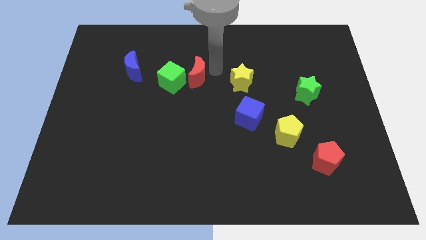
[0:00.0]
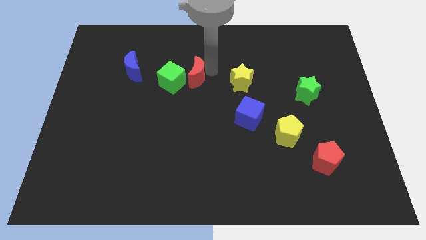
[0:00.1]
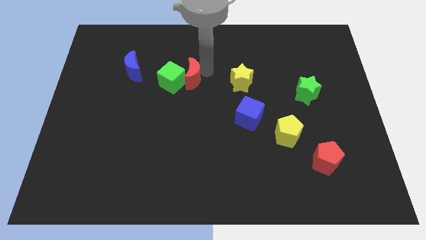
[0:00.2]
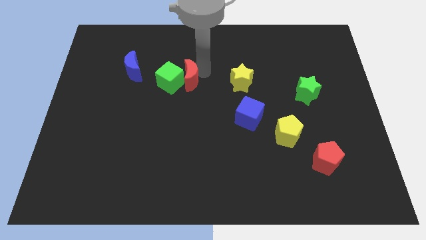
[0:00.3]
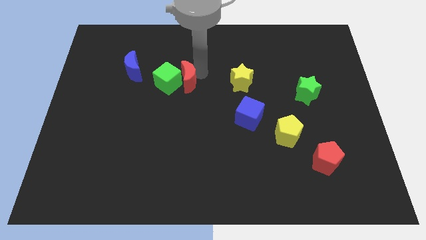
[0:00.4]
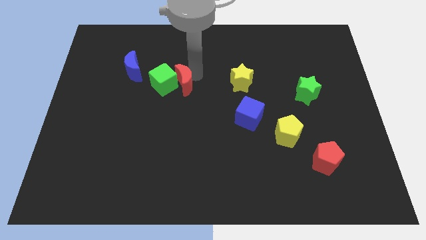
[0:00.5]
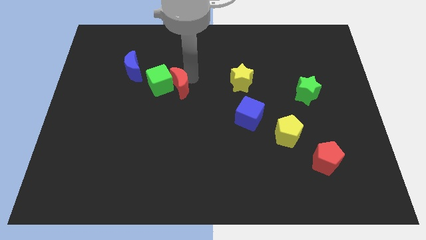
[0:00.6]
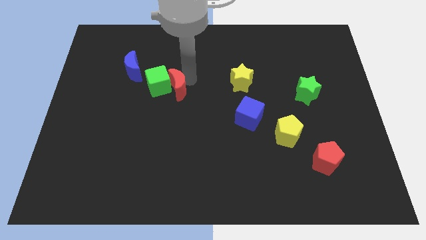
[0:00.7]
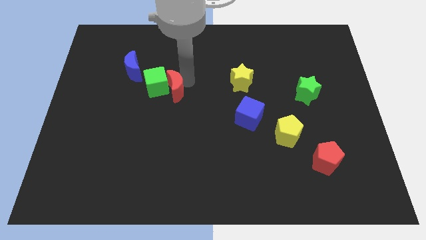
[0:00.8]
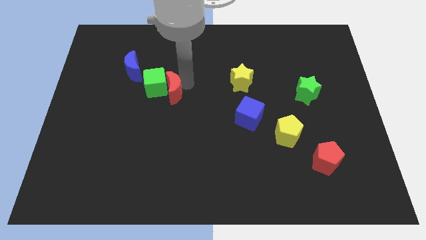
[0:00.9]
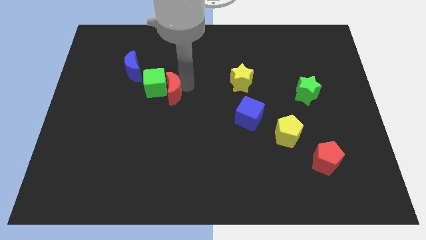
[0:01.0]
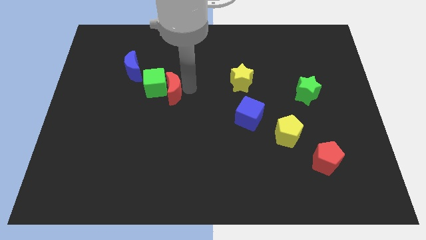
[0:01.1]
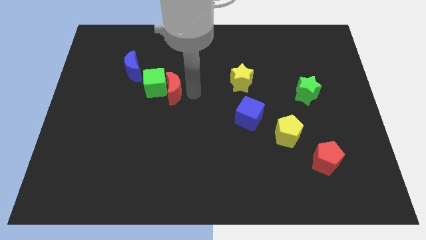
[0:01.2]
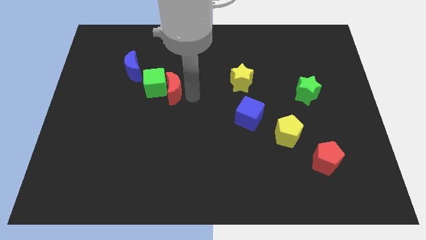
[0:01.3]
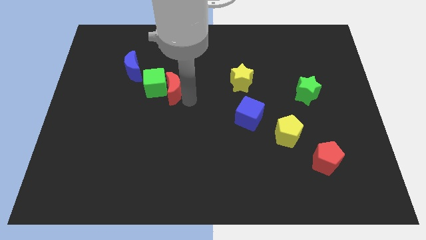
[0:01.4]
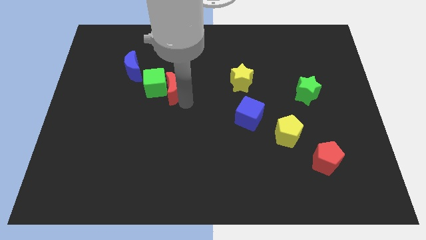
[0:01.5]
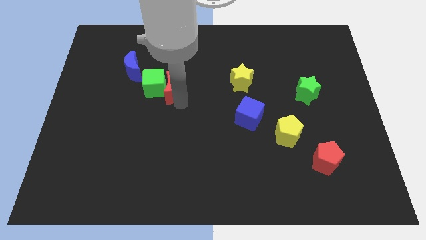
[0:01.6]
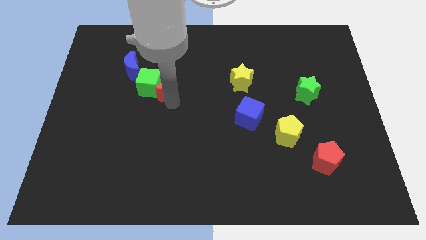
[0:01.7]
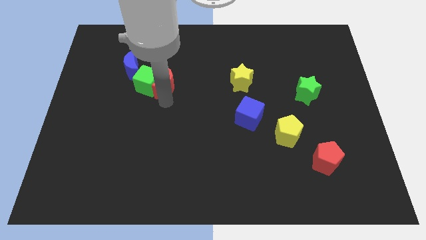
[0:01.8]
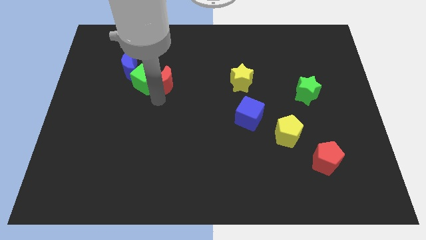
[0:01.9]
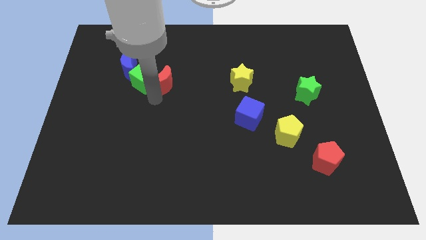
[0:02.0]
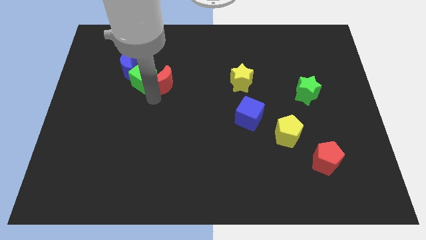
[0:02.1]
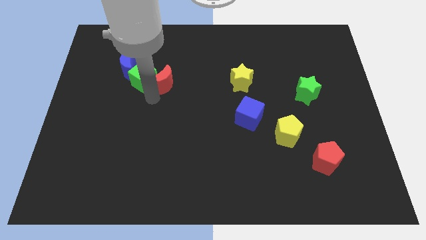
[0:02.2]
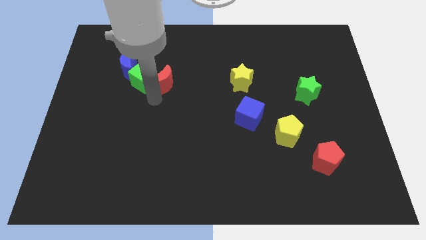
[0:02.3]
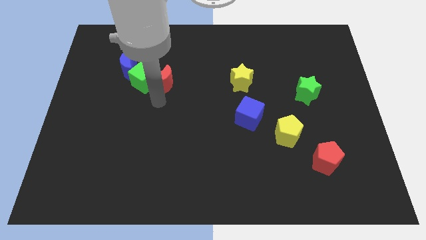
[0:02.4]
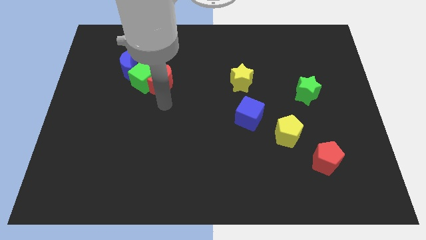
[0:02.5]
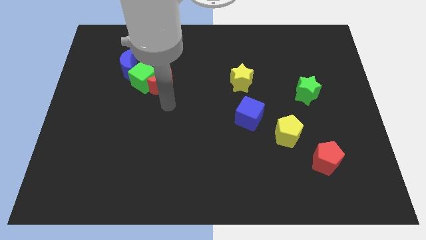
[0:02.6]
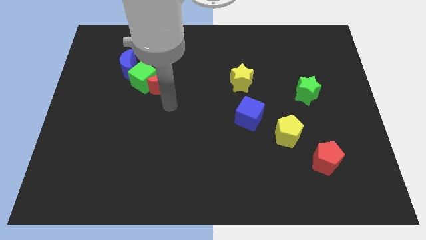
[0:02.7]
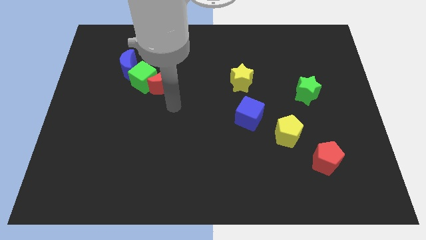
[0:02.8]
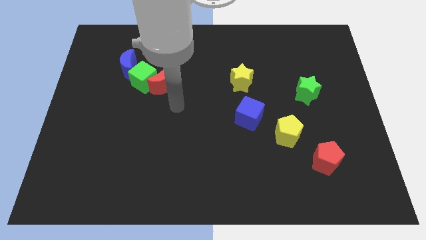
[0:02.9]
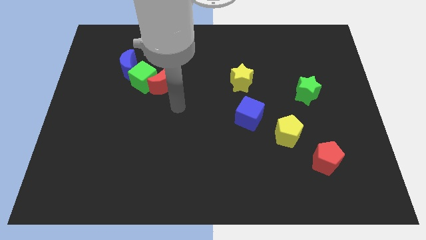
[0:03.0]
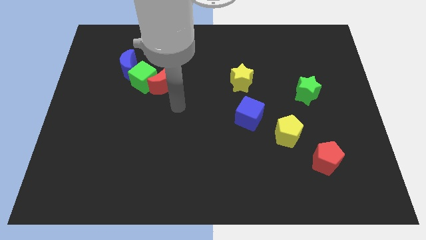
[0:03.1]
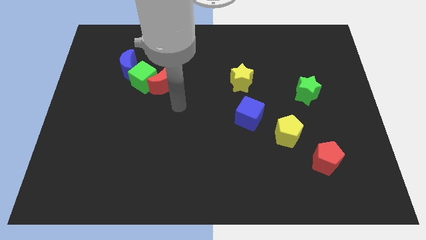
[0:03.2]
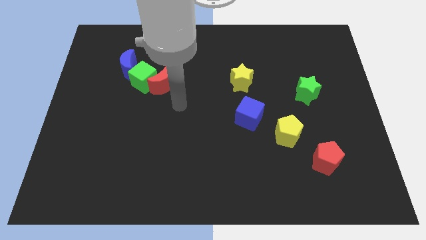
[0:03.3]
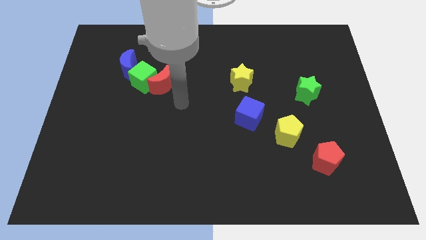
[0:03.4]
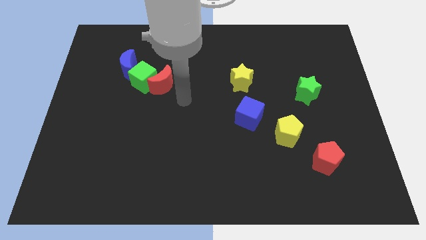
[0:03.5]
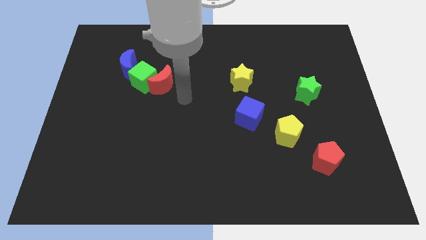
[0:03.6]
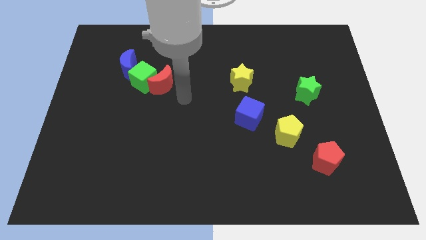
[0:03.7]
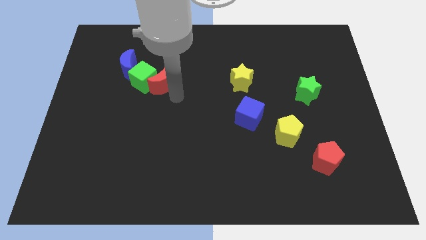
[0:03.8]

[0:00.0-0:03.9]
move the green cube and red crescent to the bottom right side of the blue crescent

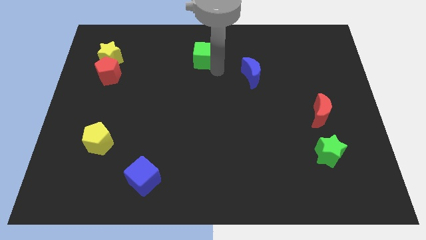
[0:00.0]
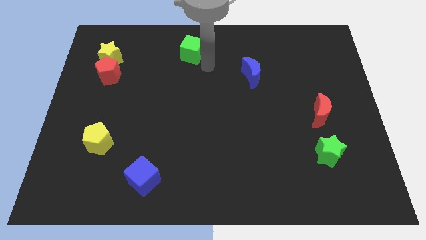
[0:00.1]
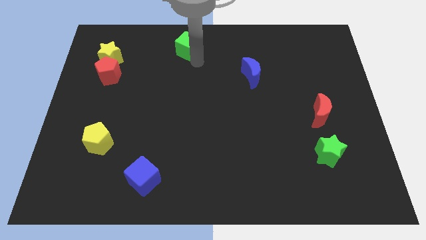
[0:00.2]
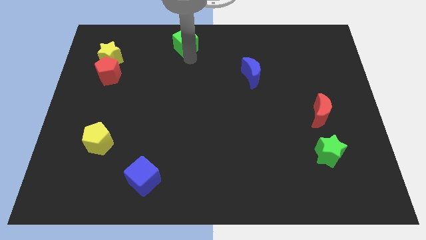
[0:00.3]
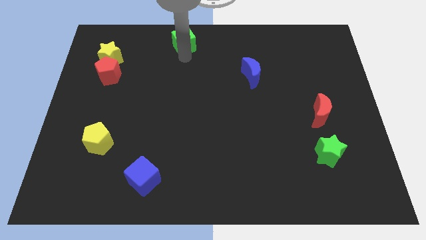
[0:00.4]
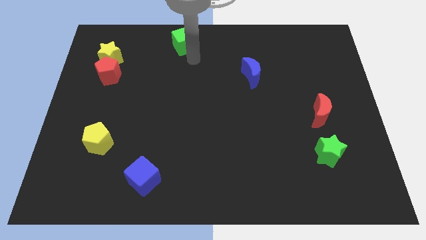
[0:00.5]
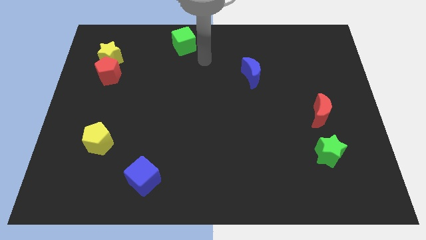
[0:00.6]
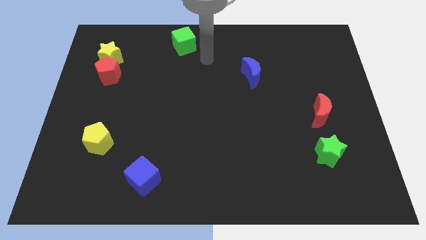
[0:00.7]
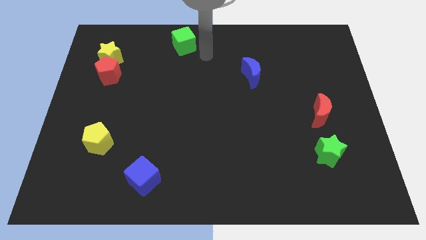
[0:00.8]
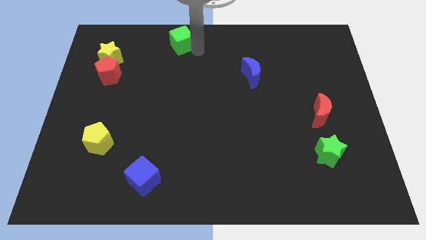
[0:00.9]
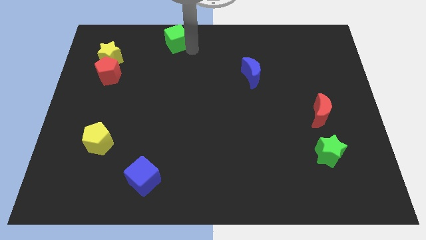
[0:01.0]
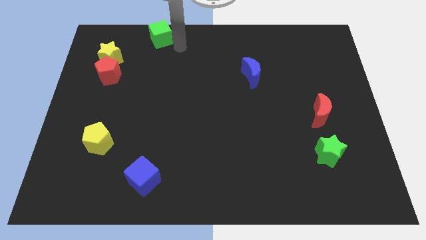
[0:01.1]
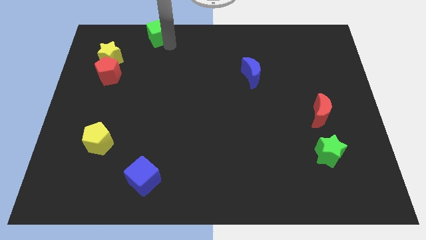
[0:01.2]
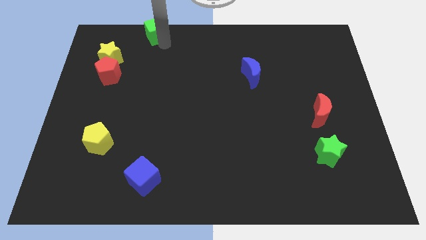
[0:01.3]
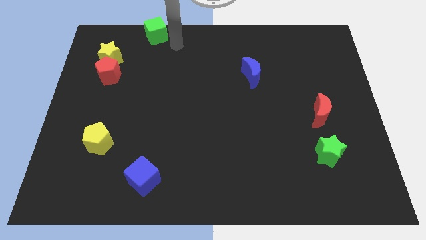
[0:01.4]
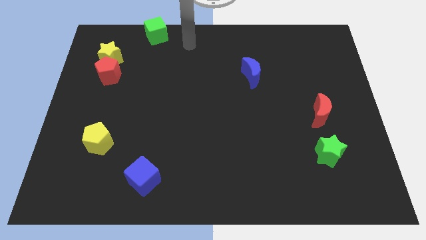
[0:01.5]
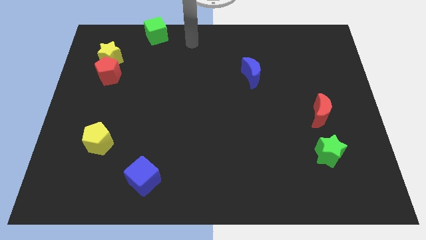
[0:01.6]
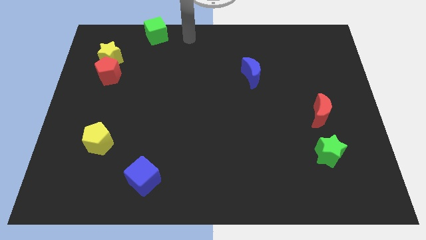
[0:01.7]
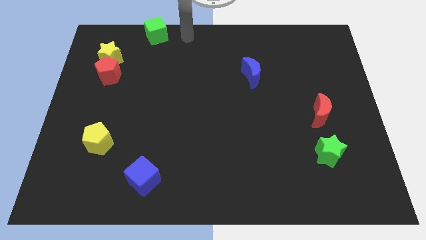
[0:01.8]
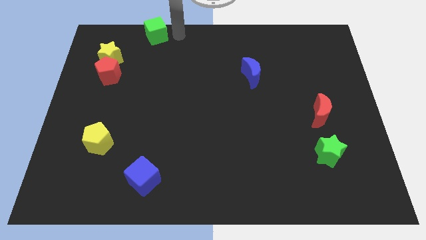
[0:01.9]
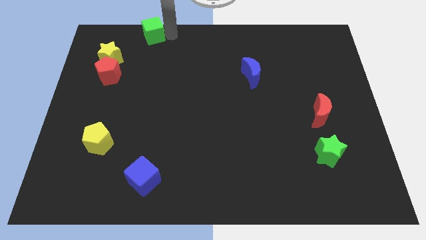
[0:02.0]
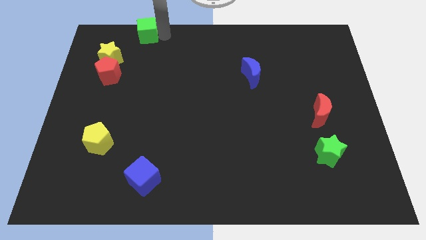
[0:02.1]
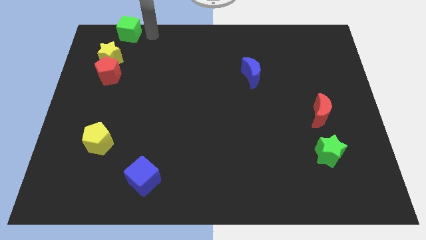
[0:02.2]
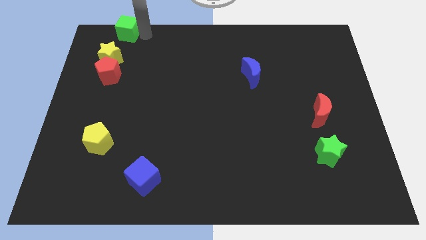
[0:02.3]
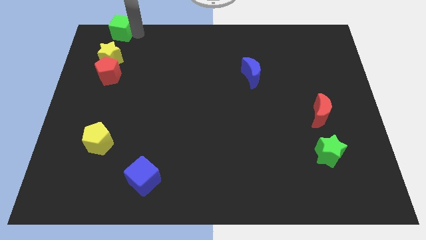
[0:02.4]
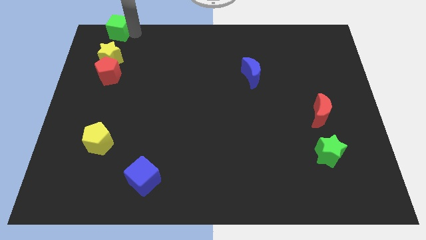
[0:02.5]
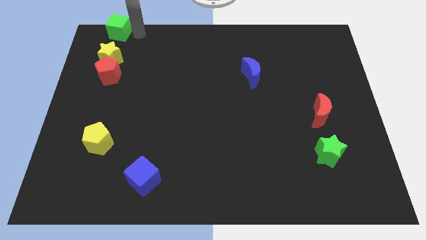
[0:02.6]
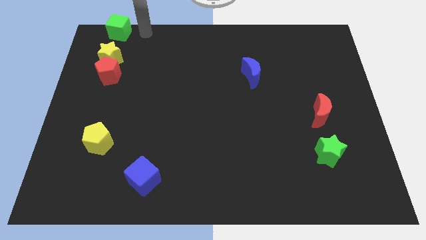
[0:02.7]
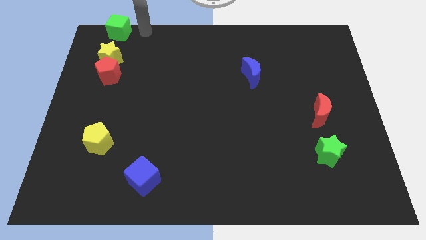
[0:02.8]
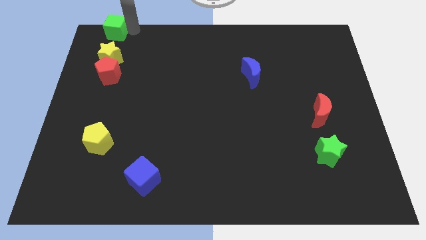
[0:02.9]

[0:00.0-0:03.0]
place green cube above yellow star

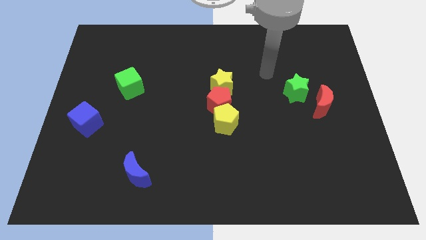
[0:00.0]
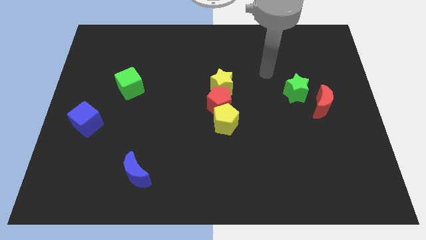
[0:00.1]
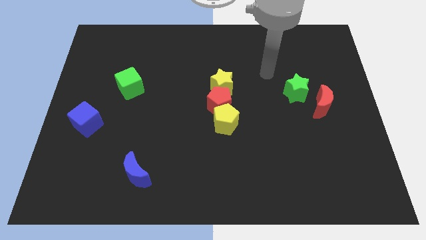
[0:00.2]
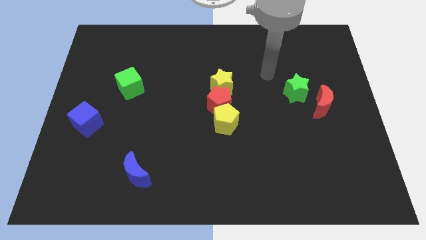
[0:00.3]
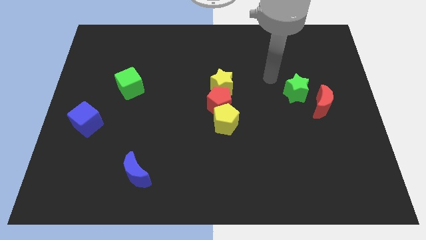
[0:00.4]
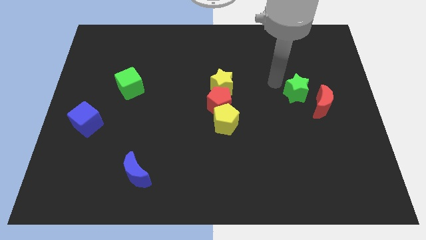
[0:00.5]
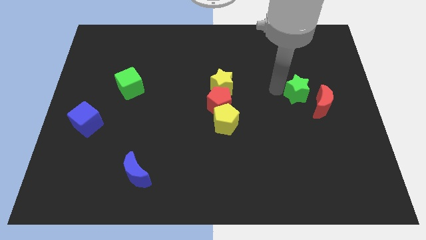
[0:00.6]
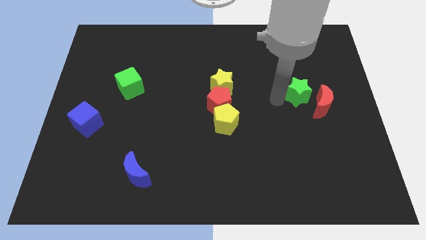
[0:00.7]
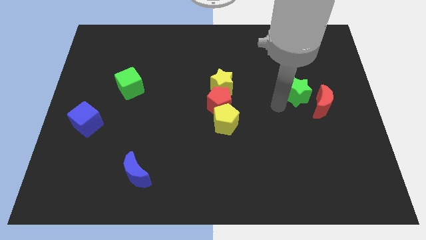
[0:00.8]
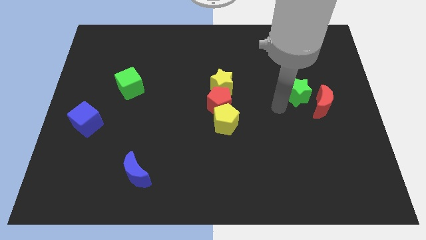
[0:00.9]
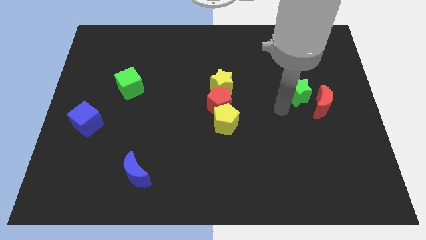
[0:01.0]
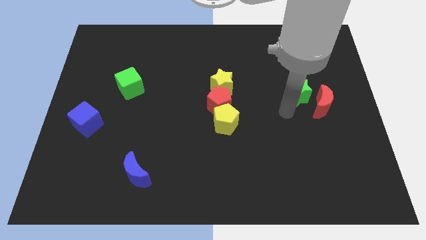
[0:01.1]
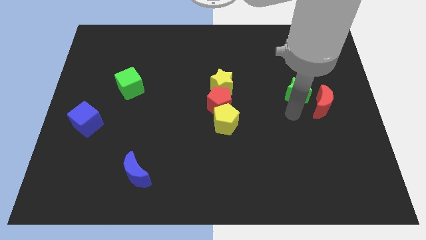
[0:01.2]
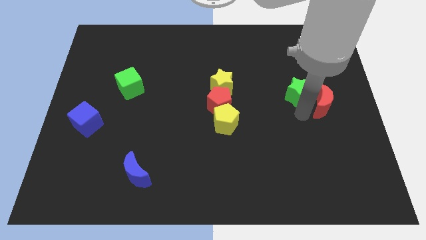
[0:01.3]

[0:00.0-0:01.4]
place your arm to the bottom of green star

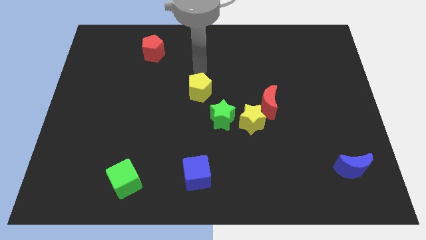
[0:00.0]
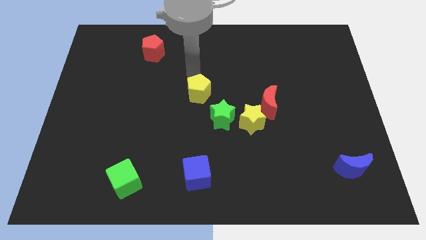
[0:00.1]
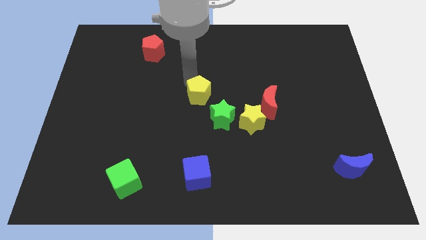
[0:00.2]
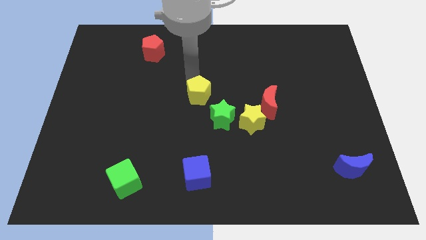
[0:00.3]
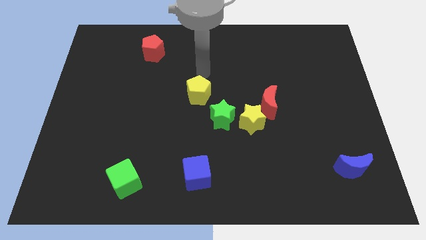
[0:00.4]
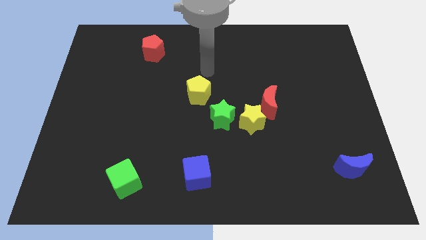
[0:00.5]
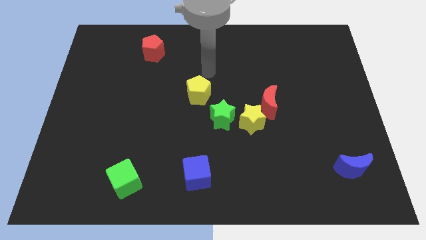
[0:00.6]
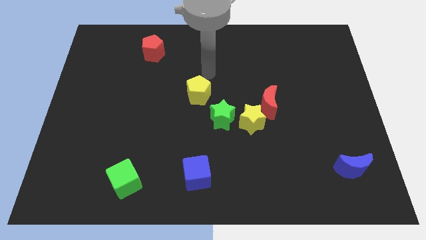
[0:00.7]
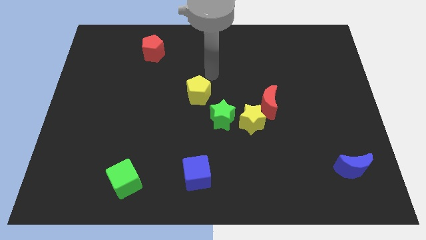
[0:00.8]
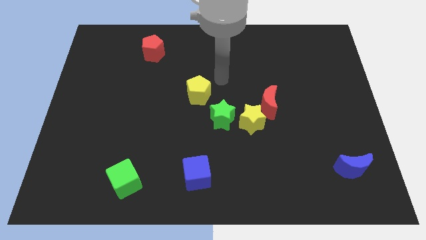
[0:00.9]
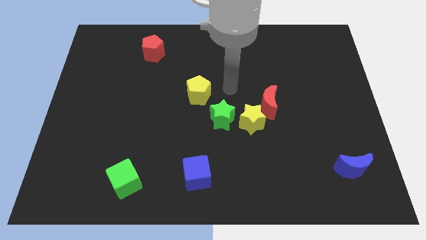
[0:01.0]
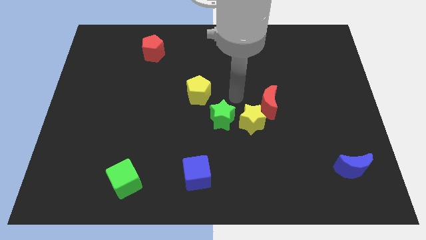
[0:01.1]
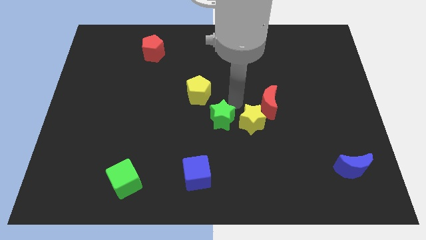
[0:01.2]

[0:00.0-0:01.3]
move your arm away from the yellow pentagon
